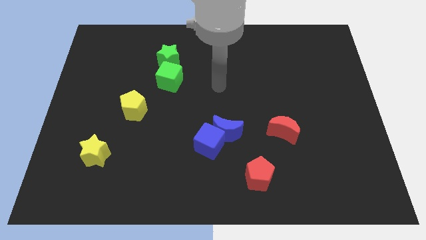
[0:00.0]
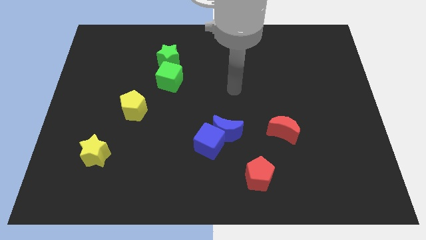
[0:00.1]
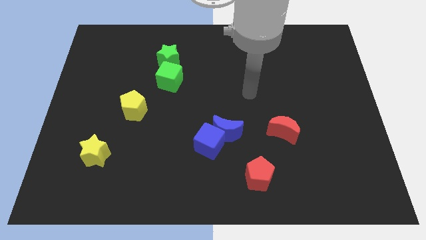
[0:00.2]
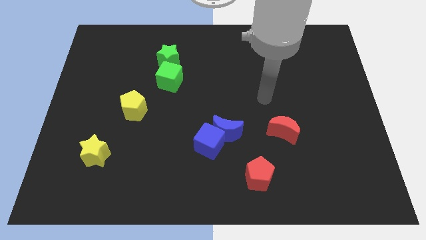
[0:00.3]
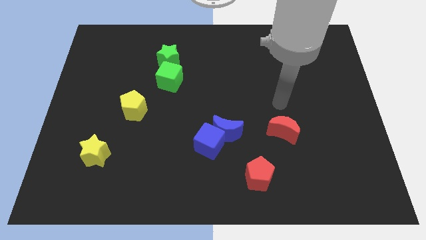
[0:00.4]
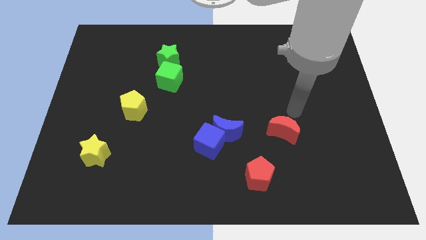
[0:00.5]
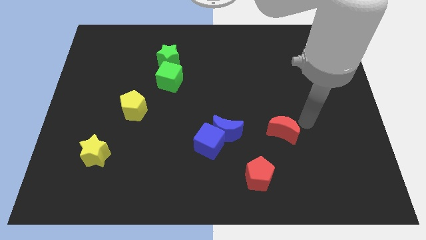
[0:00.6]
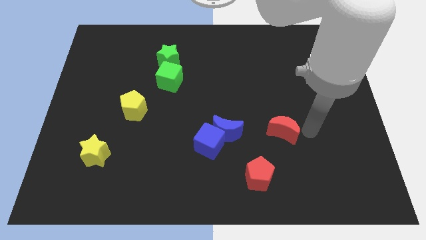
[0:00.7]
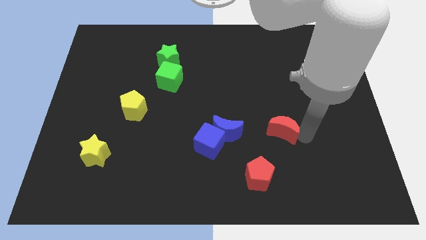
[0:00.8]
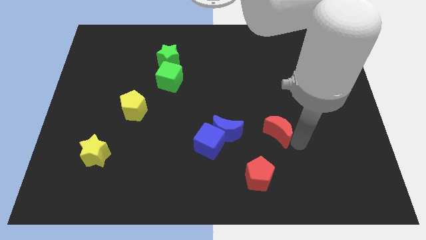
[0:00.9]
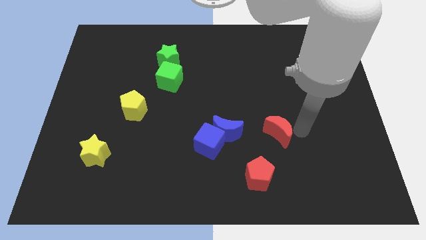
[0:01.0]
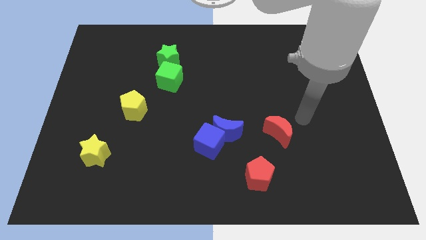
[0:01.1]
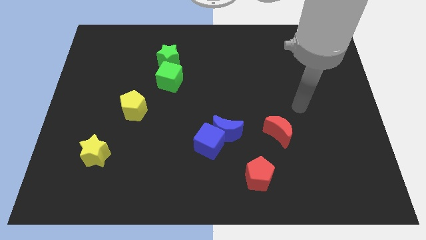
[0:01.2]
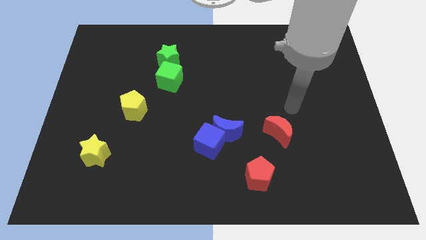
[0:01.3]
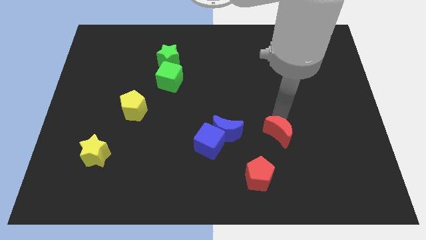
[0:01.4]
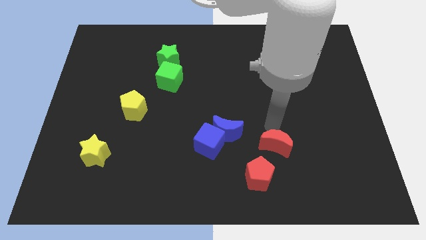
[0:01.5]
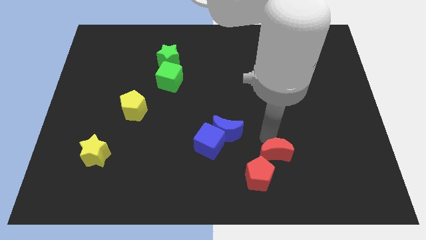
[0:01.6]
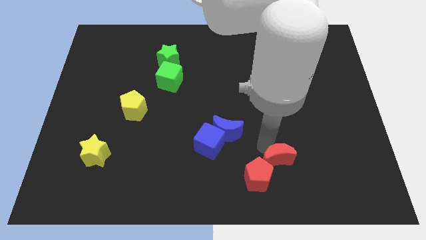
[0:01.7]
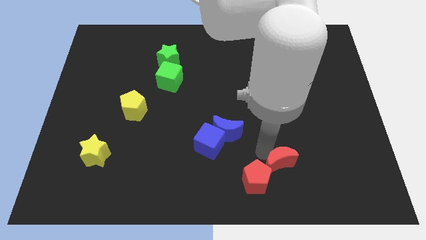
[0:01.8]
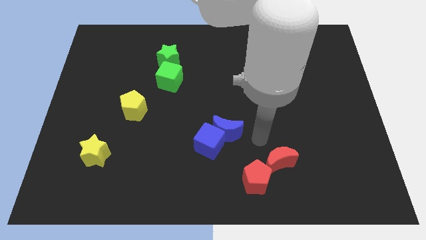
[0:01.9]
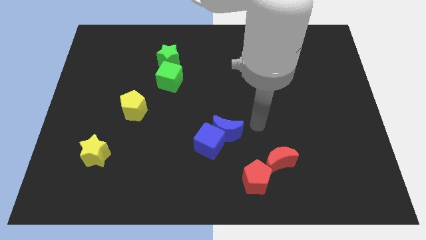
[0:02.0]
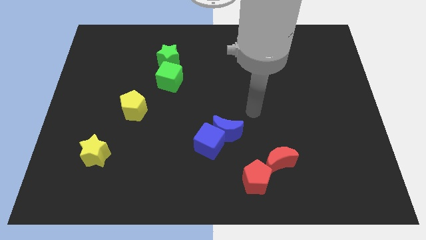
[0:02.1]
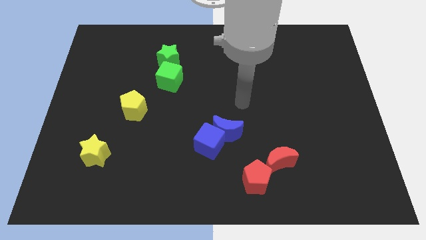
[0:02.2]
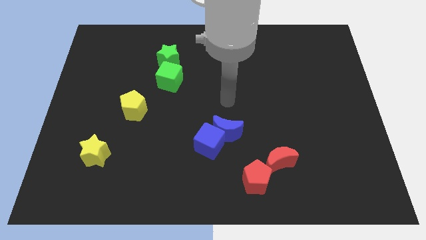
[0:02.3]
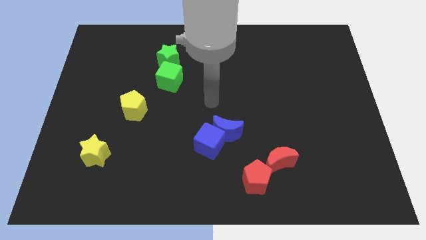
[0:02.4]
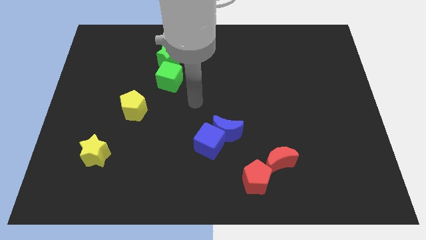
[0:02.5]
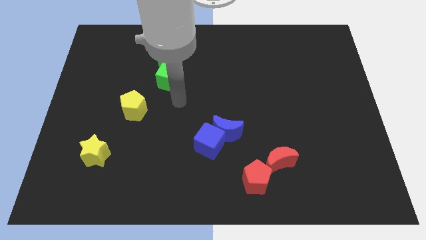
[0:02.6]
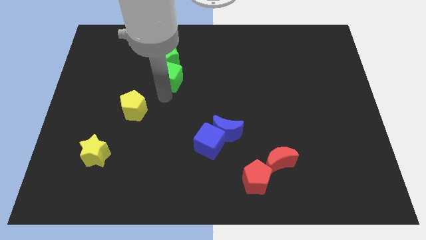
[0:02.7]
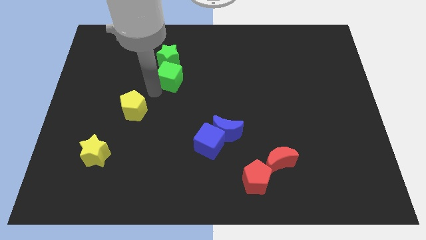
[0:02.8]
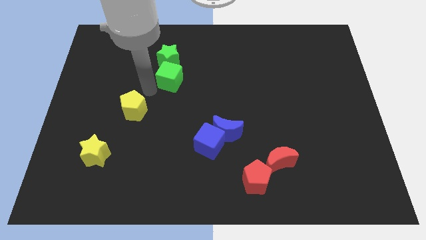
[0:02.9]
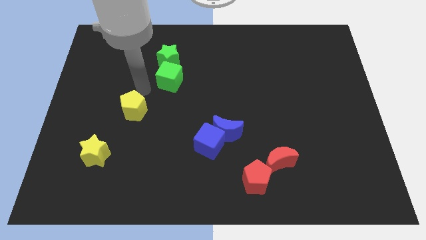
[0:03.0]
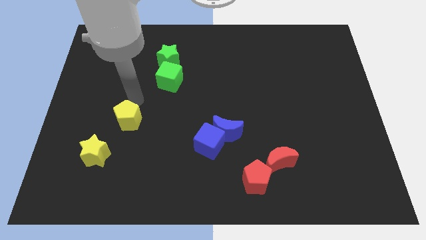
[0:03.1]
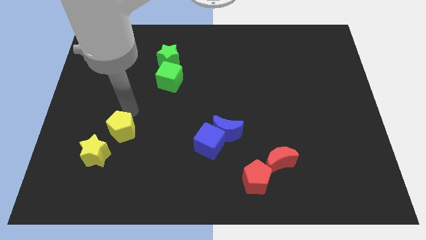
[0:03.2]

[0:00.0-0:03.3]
place the red crescent towards the top right side of the red pentagon

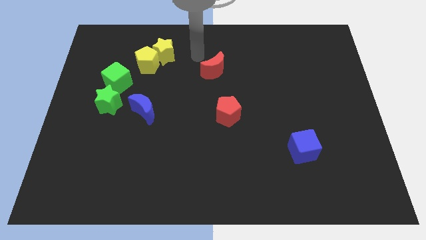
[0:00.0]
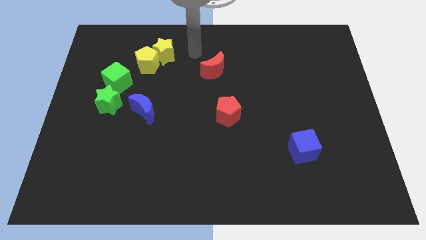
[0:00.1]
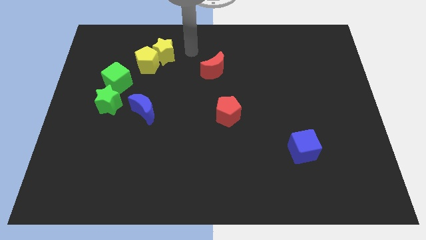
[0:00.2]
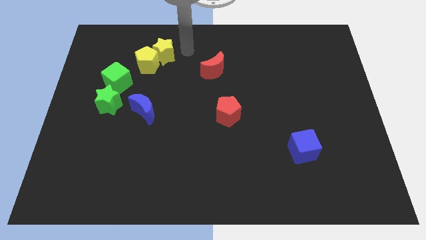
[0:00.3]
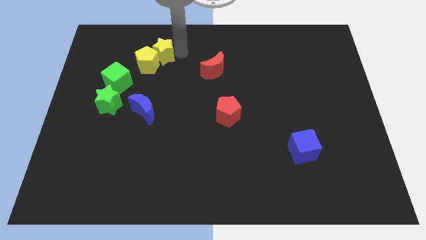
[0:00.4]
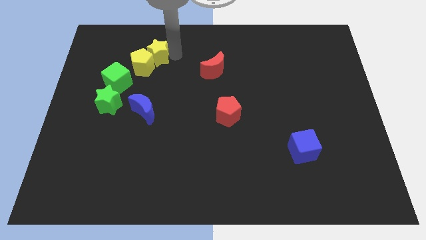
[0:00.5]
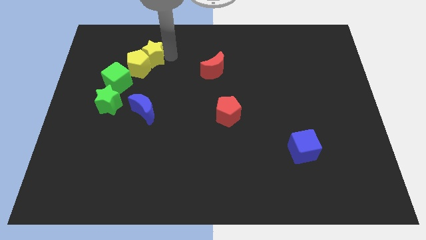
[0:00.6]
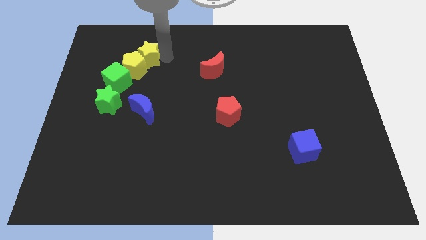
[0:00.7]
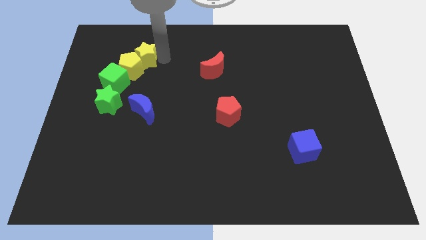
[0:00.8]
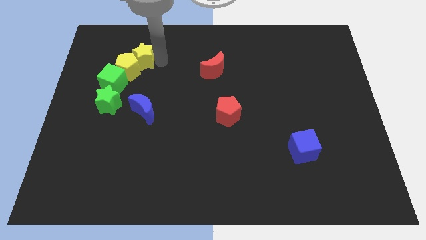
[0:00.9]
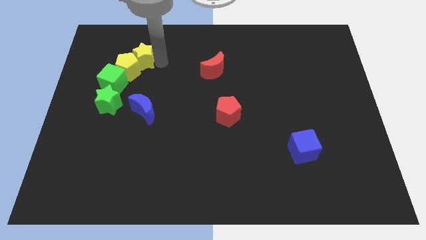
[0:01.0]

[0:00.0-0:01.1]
push yellow star into yellow pentagon

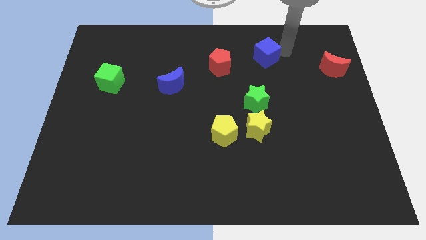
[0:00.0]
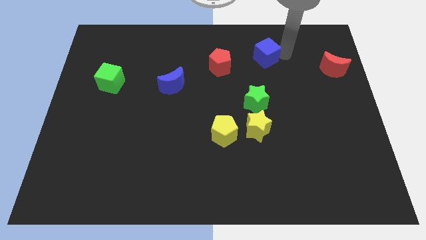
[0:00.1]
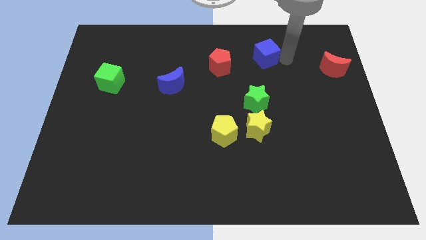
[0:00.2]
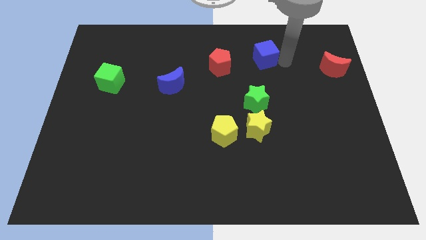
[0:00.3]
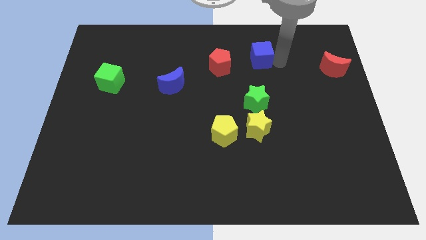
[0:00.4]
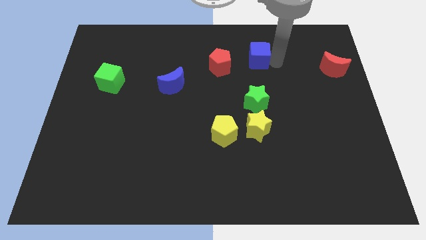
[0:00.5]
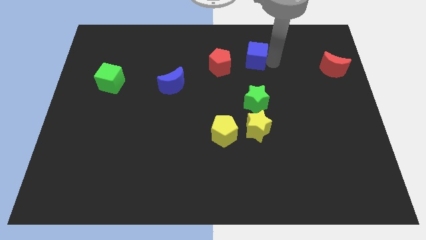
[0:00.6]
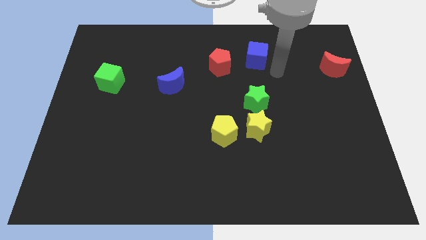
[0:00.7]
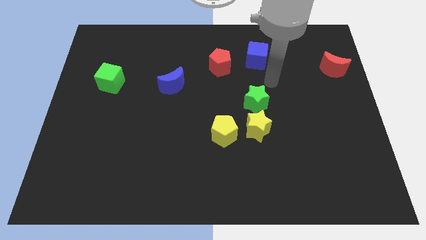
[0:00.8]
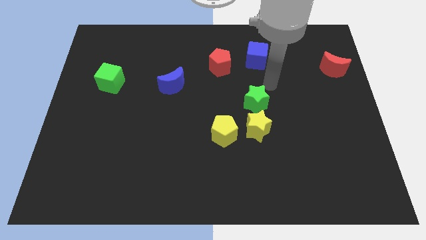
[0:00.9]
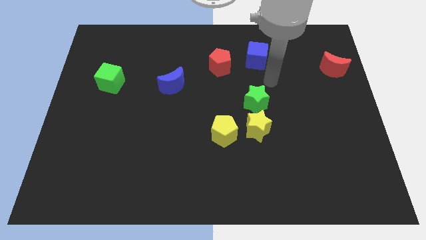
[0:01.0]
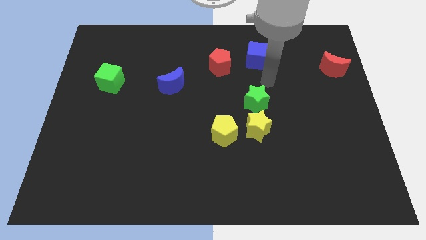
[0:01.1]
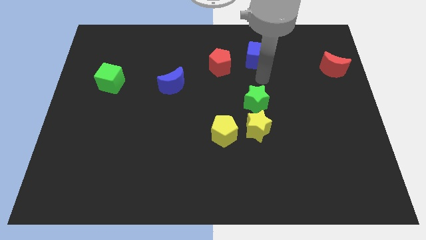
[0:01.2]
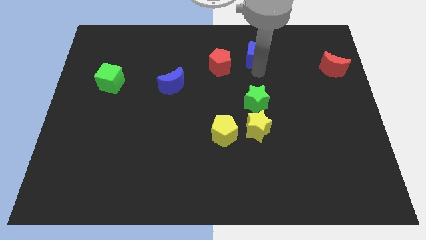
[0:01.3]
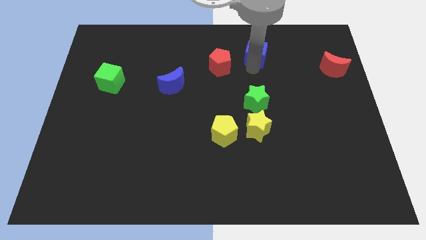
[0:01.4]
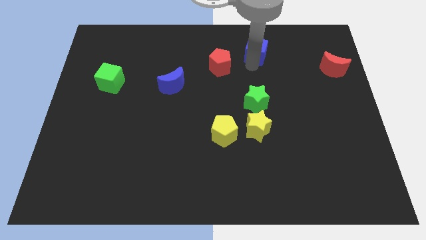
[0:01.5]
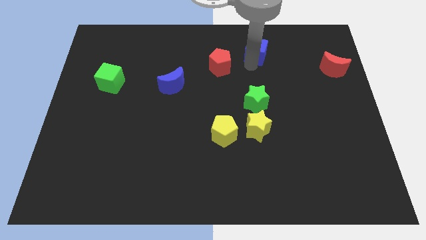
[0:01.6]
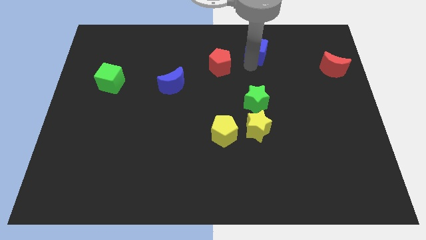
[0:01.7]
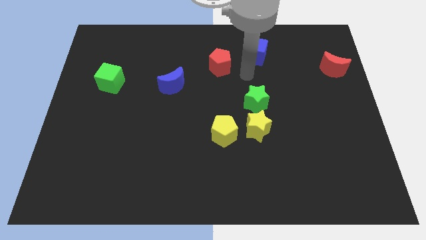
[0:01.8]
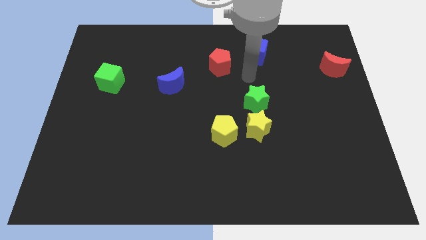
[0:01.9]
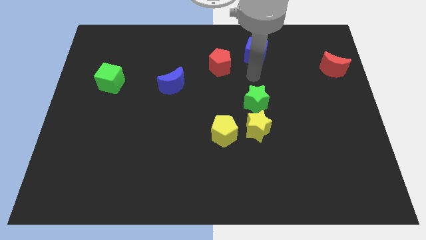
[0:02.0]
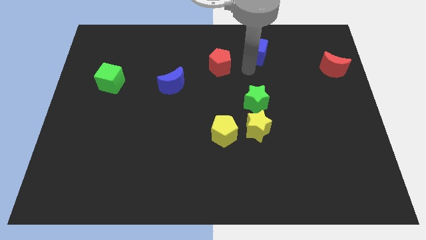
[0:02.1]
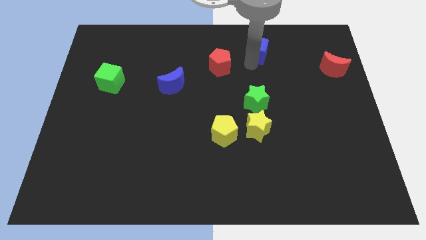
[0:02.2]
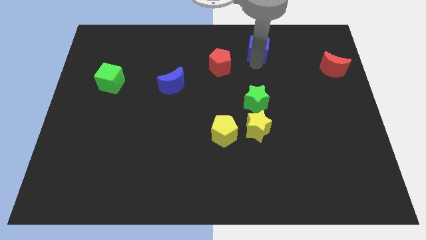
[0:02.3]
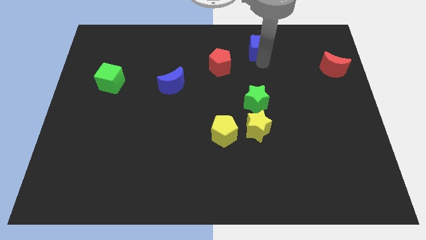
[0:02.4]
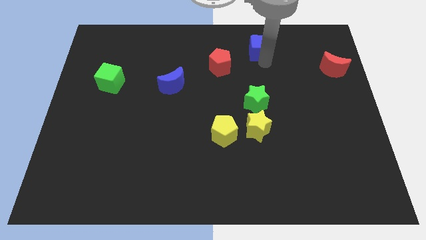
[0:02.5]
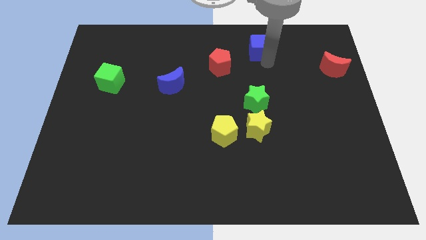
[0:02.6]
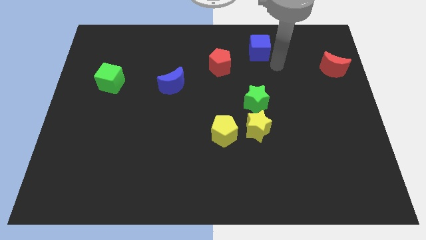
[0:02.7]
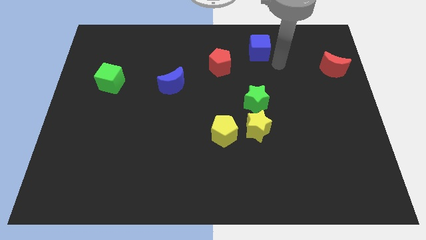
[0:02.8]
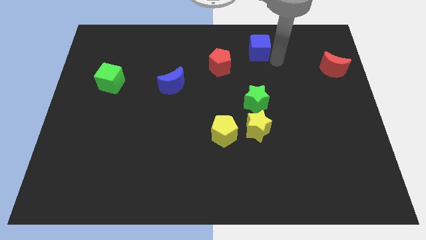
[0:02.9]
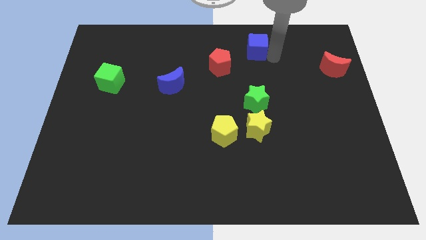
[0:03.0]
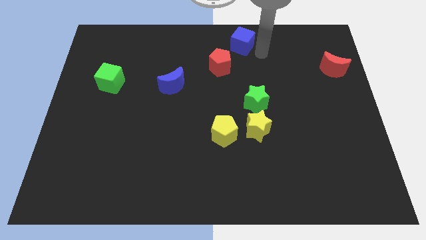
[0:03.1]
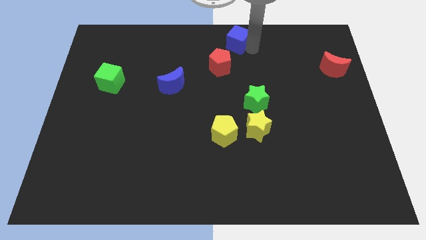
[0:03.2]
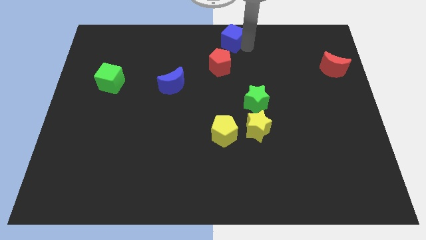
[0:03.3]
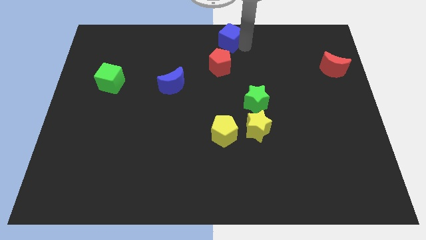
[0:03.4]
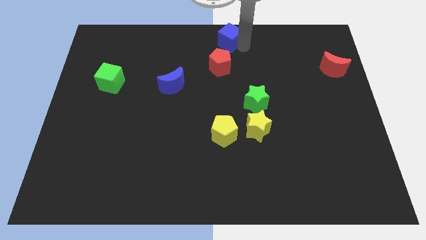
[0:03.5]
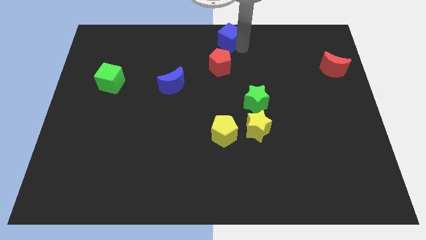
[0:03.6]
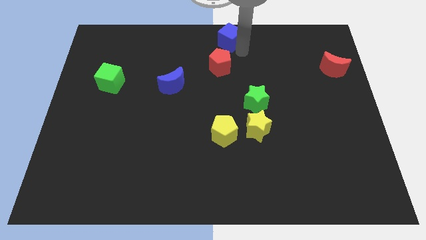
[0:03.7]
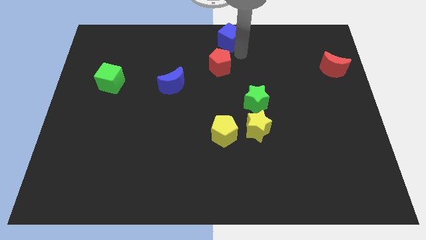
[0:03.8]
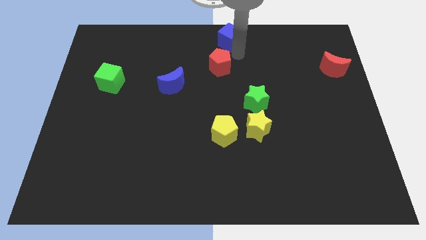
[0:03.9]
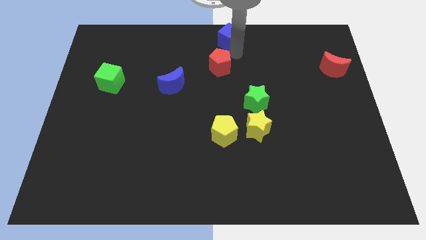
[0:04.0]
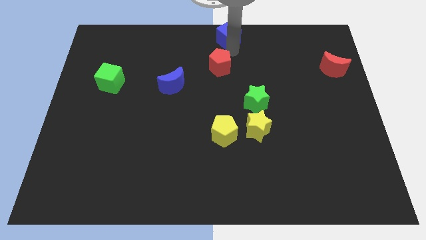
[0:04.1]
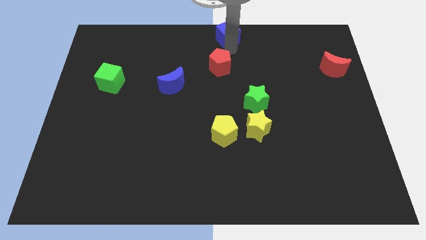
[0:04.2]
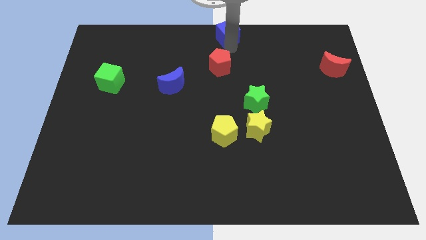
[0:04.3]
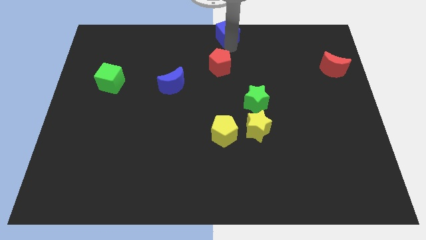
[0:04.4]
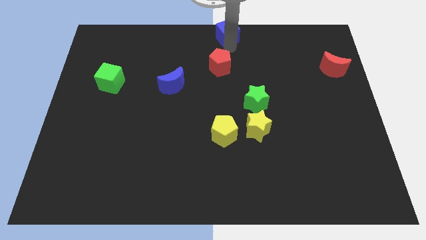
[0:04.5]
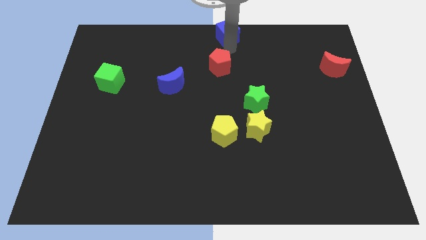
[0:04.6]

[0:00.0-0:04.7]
push the blue cube to the top side of the red pentagon
